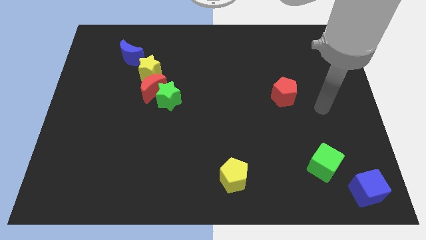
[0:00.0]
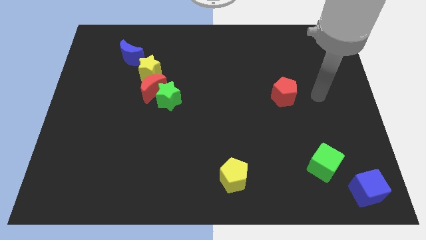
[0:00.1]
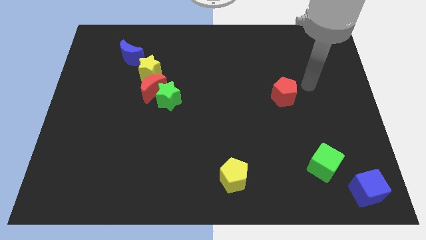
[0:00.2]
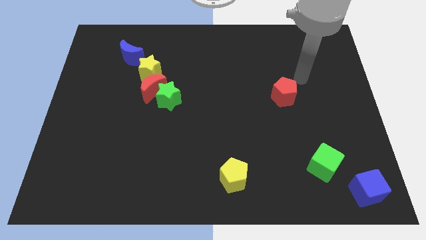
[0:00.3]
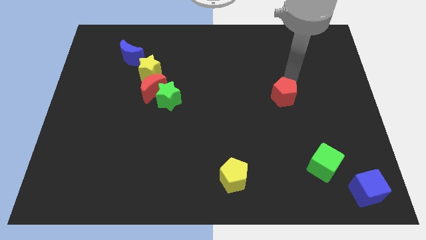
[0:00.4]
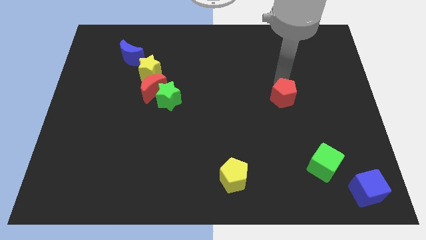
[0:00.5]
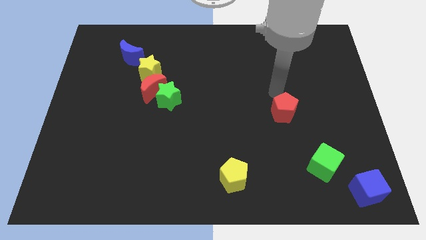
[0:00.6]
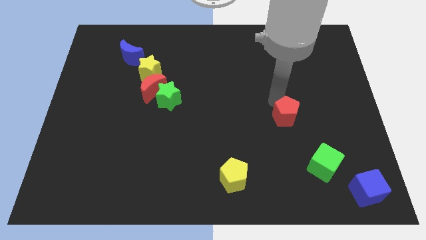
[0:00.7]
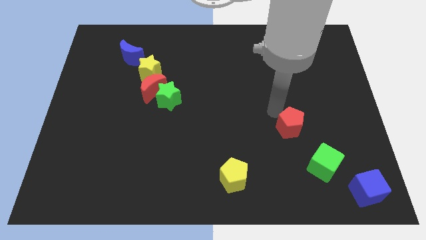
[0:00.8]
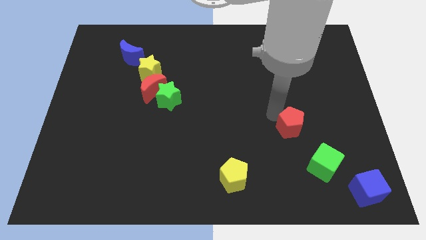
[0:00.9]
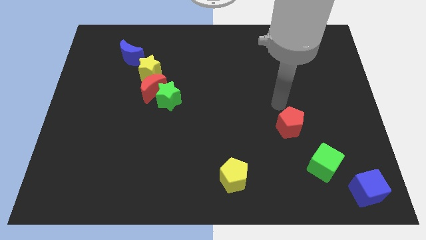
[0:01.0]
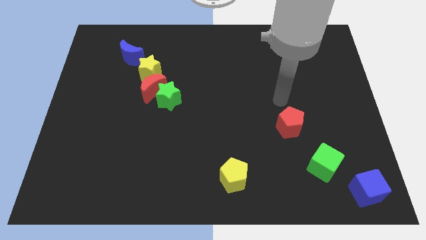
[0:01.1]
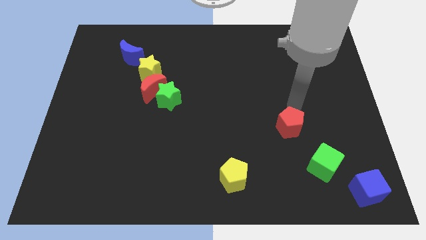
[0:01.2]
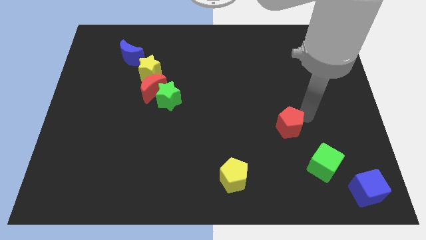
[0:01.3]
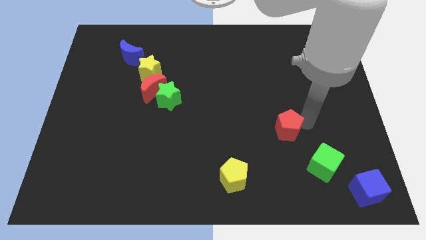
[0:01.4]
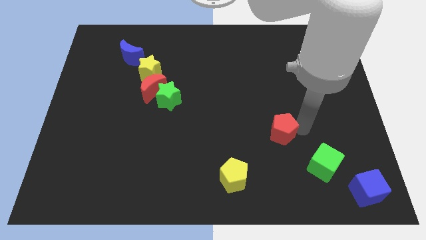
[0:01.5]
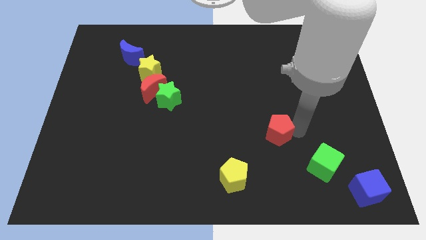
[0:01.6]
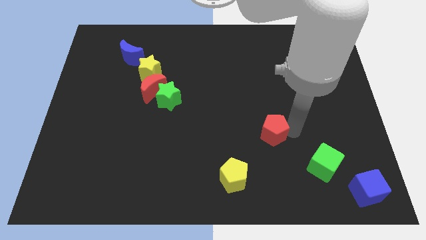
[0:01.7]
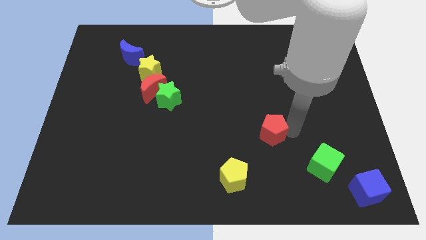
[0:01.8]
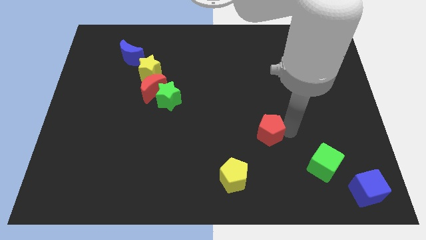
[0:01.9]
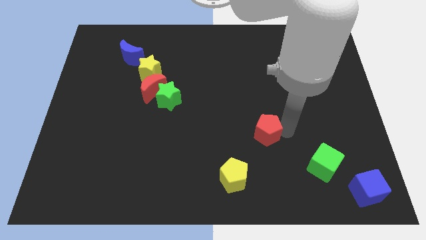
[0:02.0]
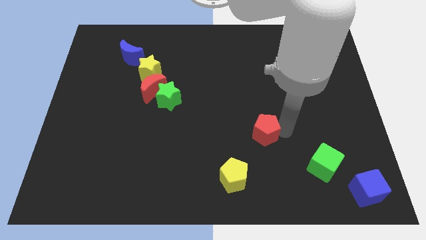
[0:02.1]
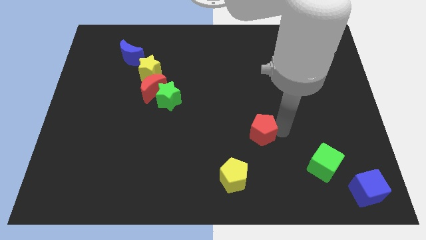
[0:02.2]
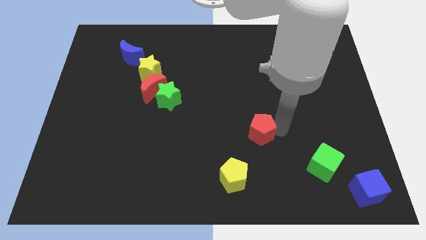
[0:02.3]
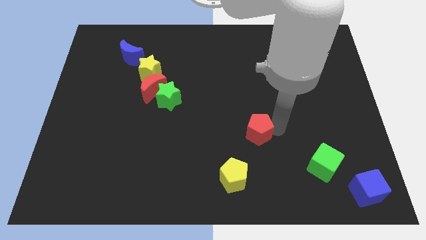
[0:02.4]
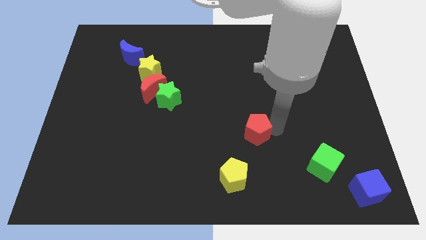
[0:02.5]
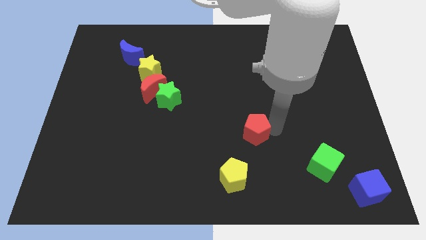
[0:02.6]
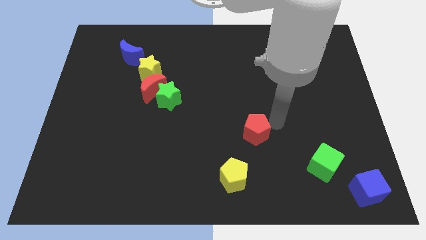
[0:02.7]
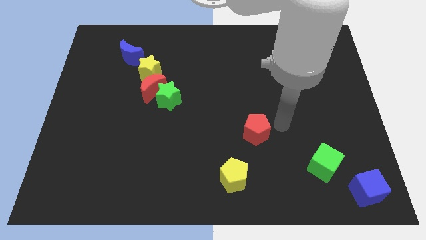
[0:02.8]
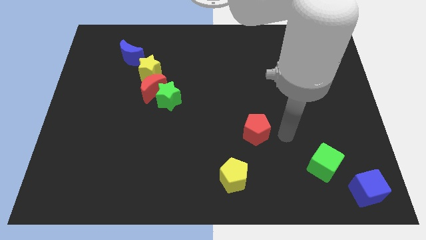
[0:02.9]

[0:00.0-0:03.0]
place the red pentagon diagonally top right to the yellow pentagon

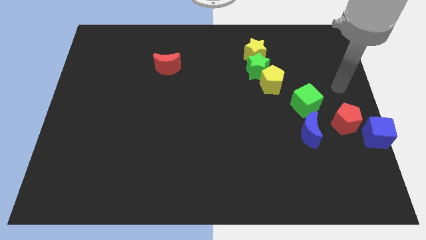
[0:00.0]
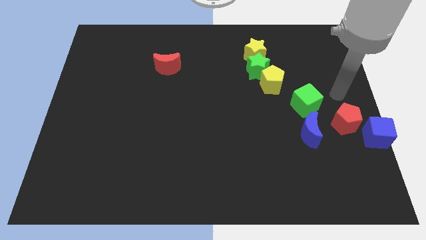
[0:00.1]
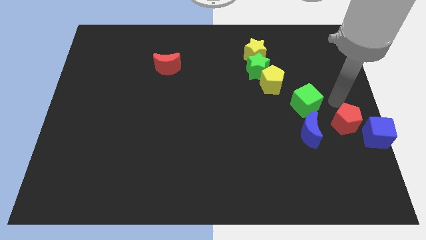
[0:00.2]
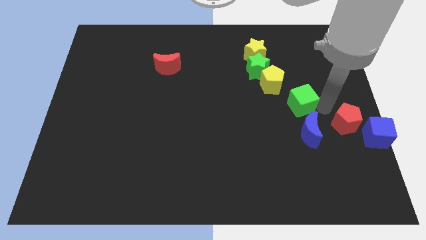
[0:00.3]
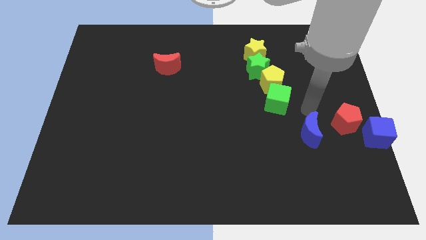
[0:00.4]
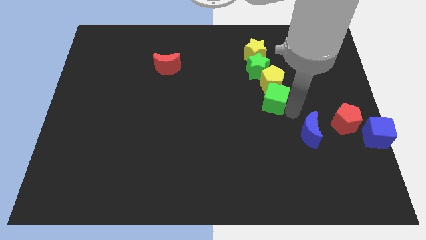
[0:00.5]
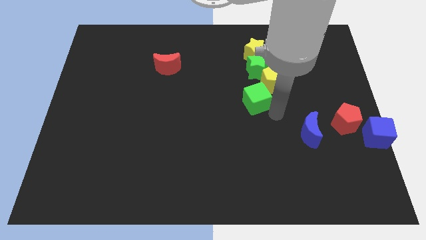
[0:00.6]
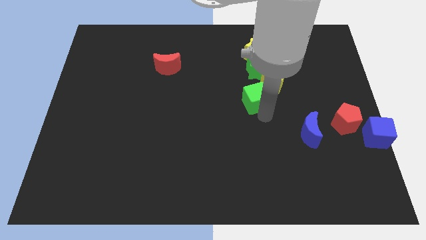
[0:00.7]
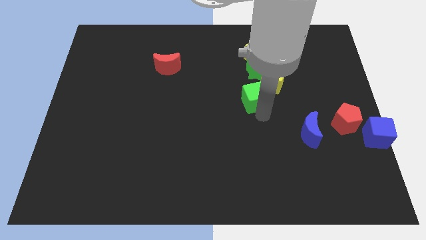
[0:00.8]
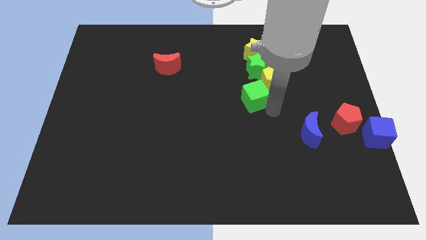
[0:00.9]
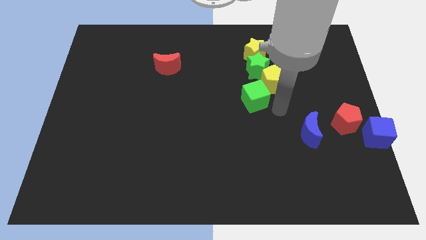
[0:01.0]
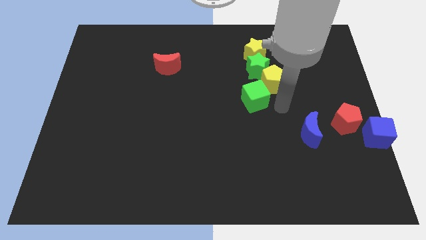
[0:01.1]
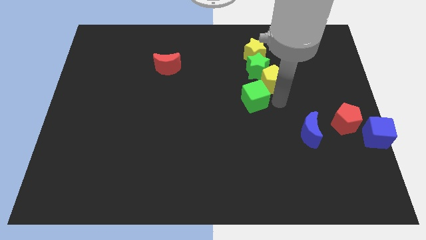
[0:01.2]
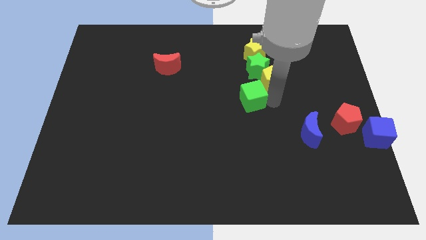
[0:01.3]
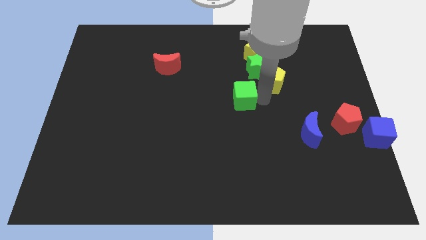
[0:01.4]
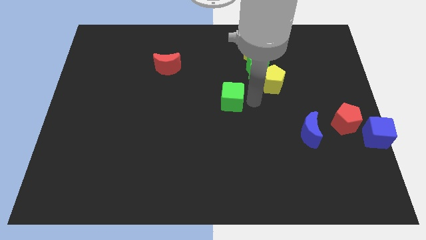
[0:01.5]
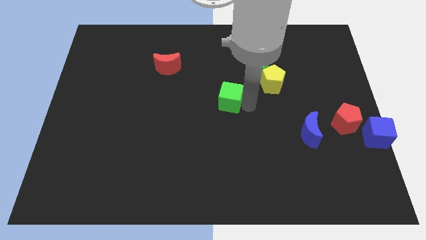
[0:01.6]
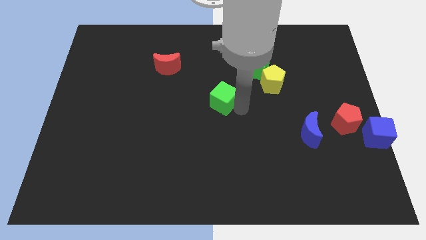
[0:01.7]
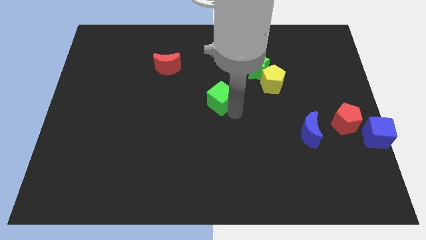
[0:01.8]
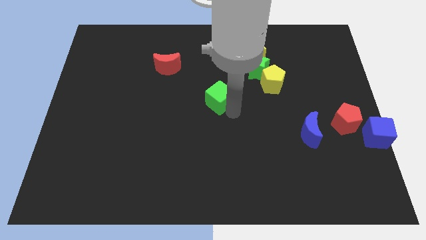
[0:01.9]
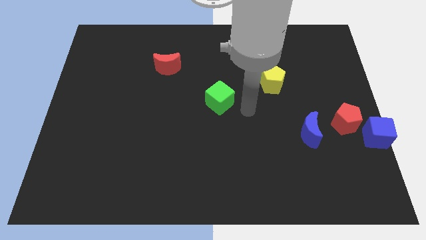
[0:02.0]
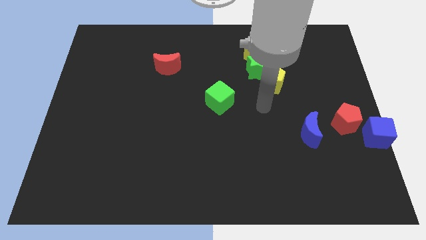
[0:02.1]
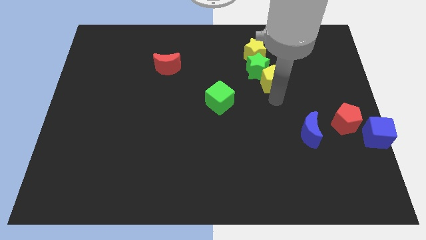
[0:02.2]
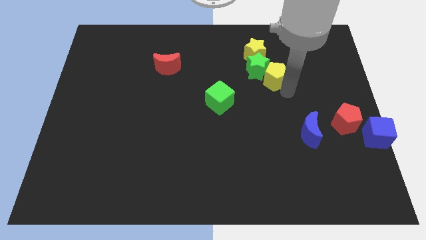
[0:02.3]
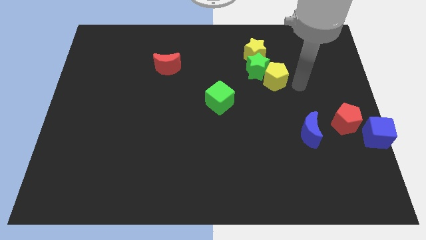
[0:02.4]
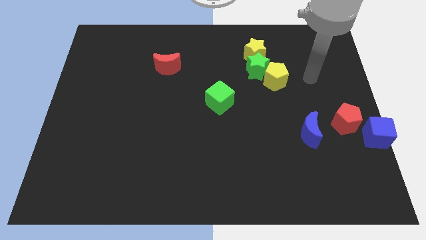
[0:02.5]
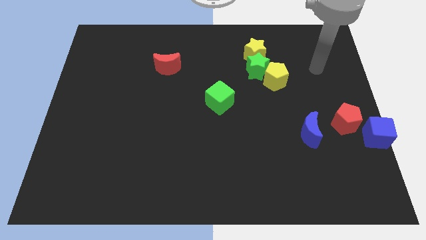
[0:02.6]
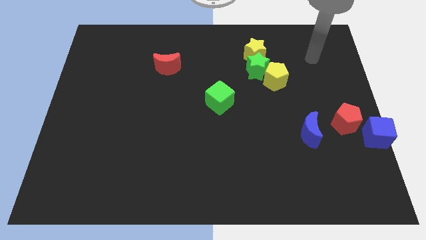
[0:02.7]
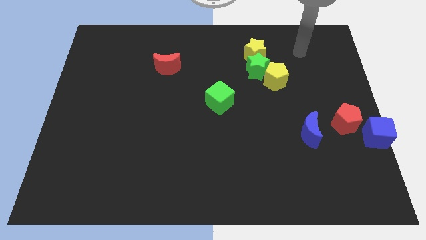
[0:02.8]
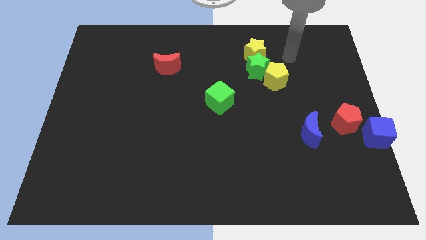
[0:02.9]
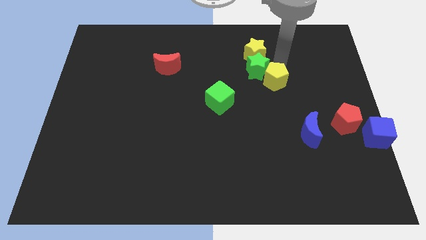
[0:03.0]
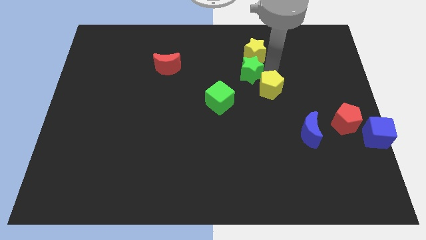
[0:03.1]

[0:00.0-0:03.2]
move the green cube diagonally bottom right to the red moon

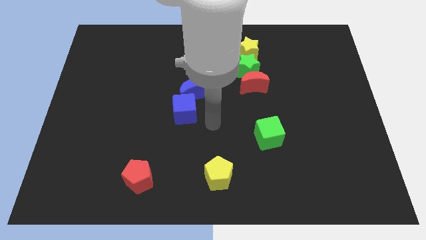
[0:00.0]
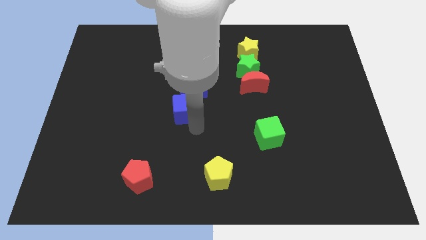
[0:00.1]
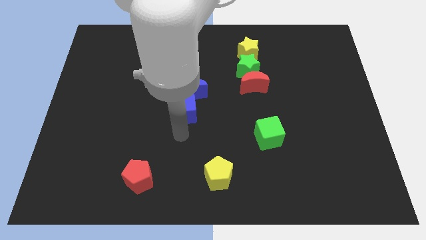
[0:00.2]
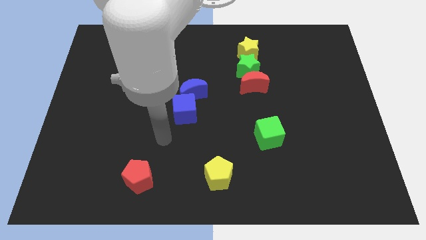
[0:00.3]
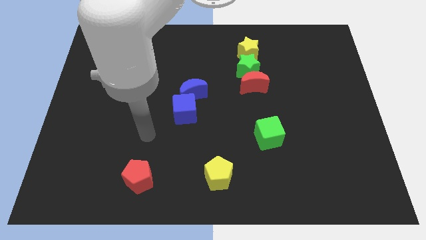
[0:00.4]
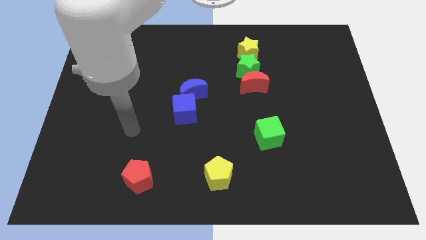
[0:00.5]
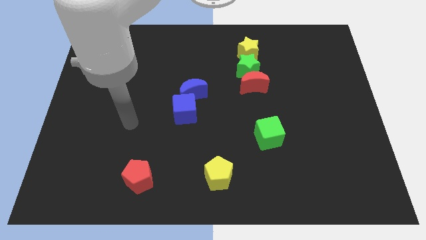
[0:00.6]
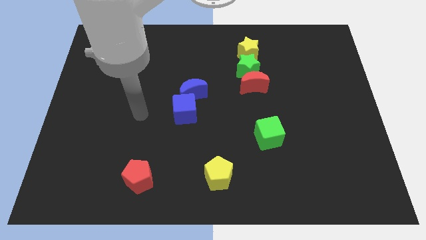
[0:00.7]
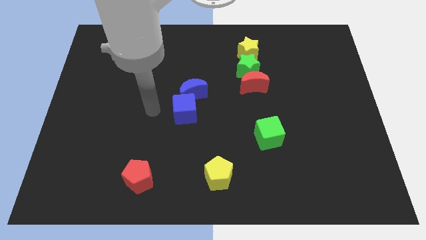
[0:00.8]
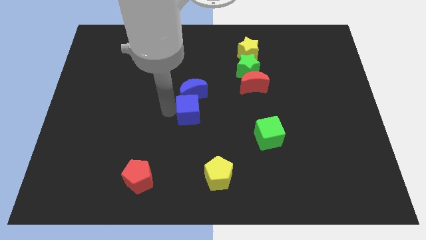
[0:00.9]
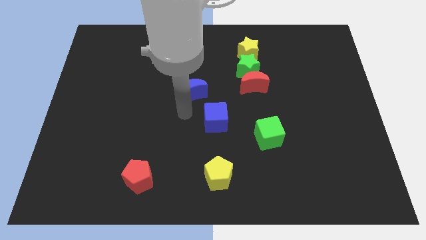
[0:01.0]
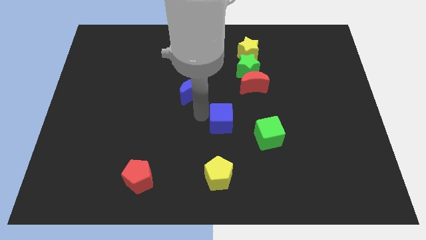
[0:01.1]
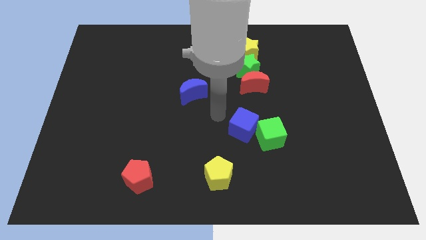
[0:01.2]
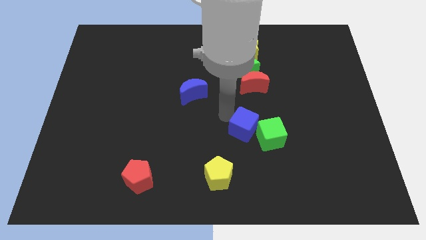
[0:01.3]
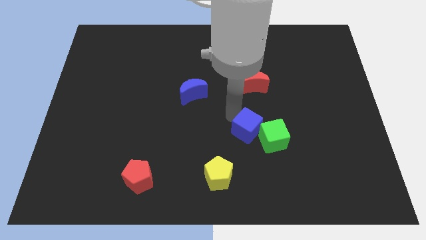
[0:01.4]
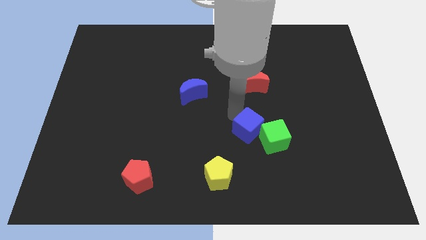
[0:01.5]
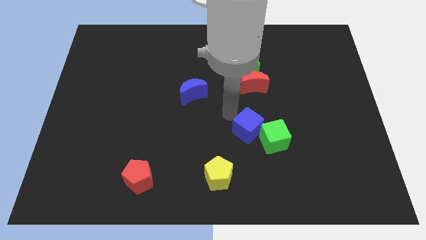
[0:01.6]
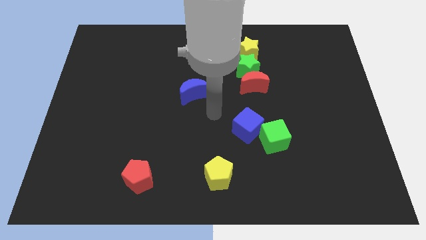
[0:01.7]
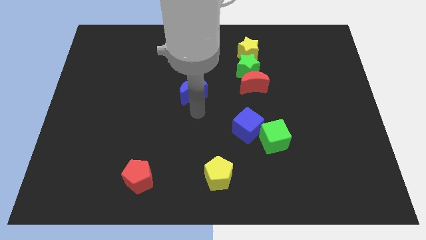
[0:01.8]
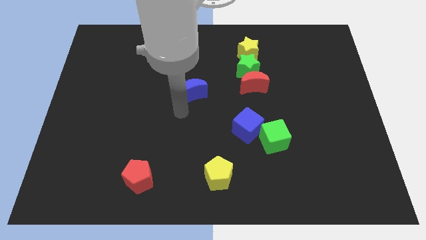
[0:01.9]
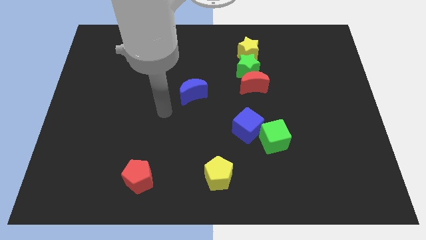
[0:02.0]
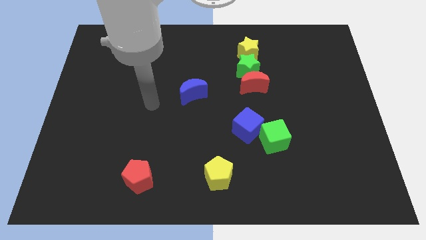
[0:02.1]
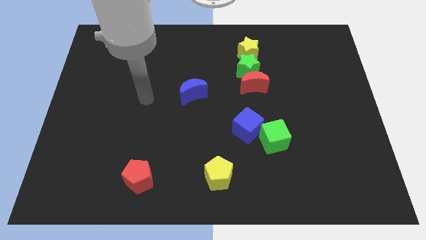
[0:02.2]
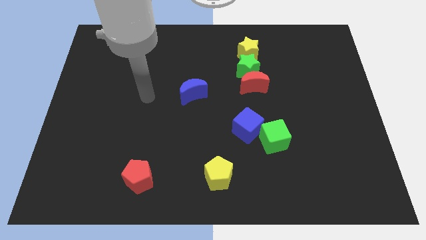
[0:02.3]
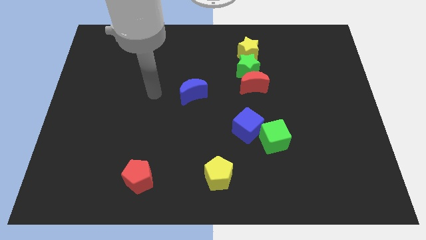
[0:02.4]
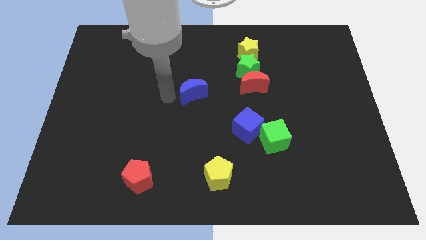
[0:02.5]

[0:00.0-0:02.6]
move blue cube to the green cube
